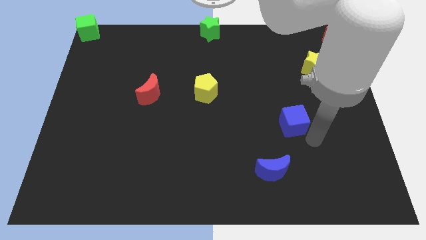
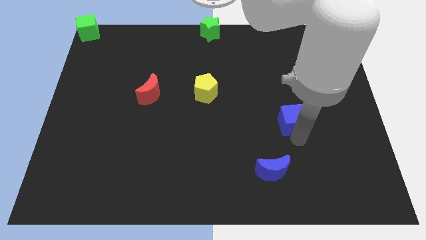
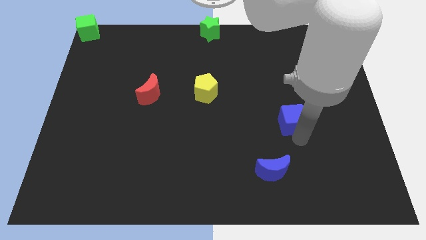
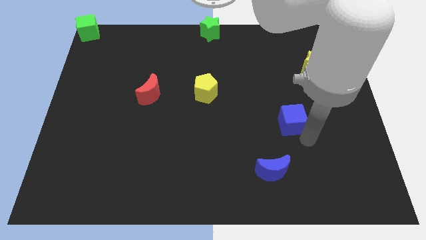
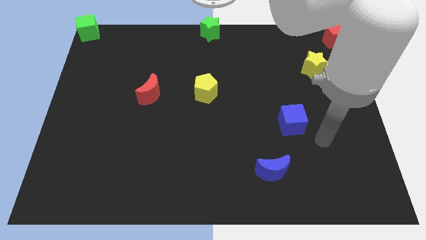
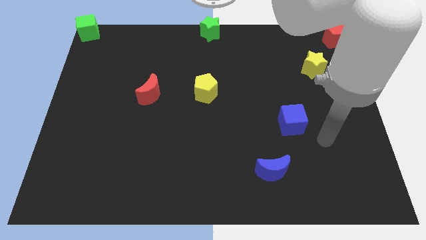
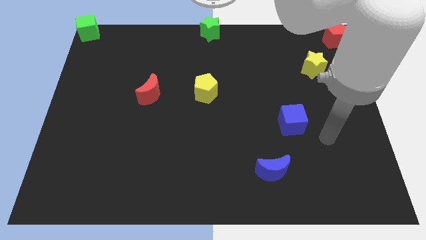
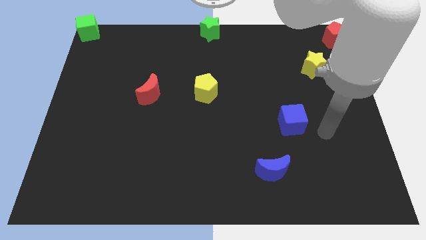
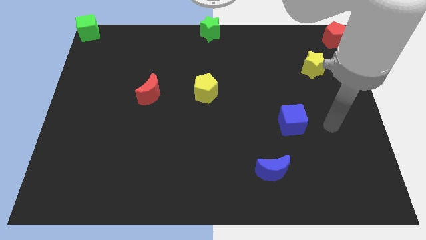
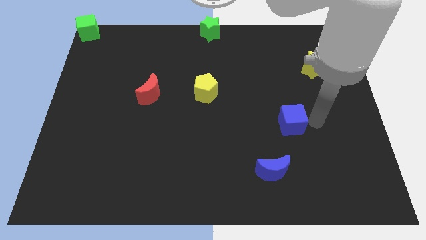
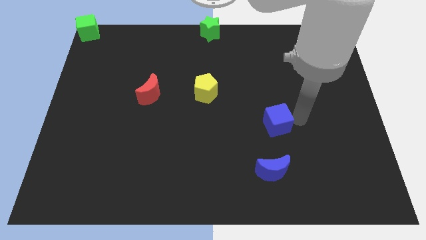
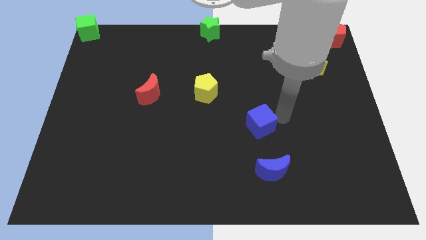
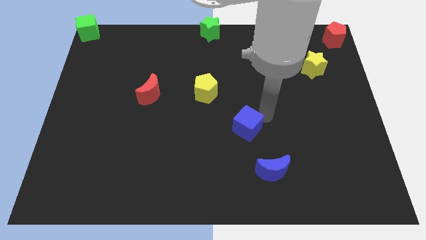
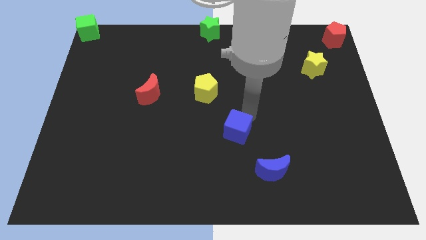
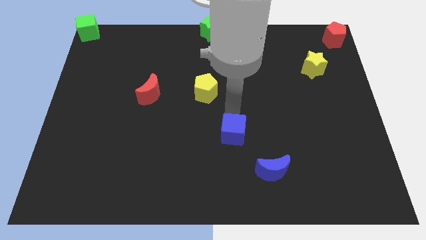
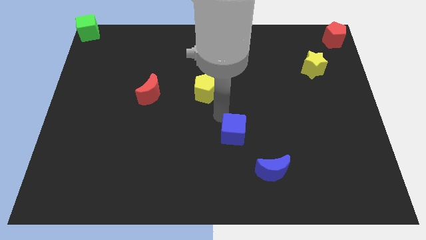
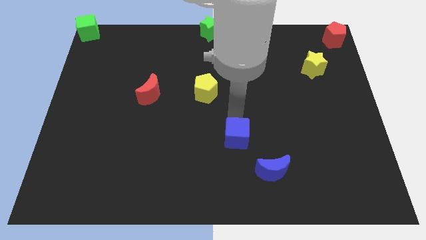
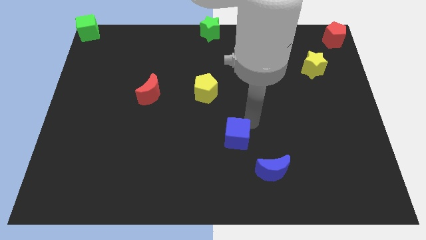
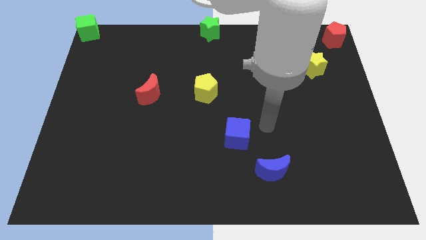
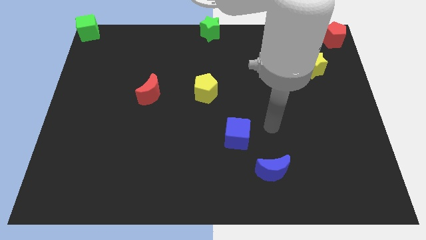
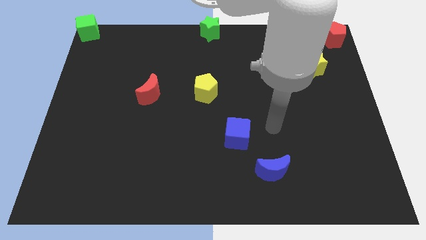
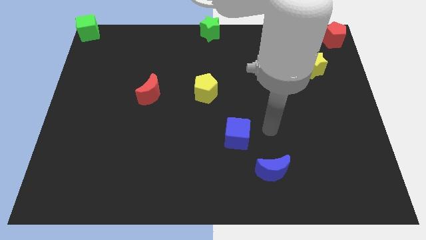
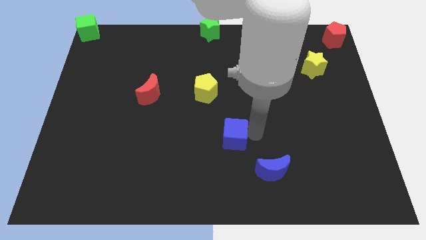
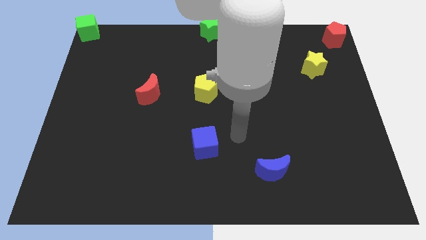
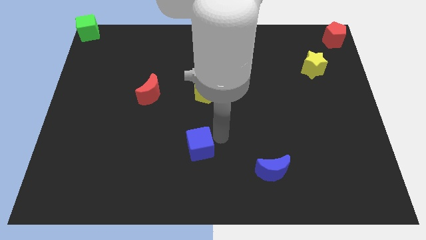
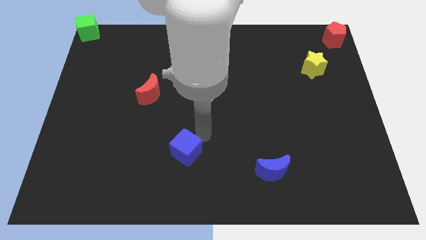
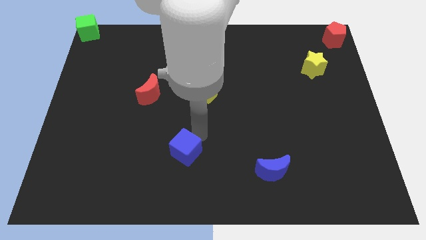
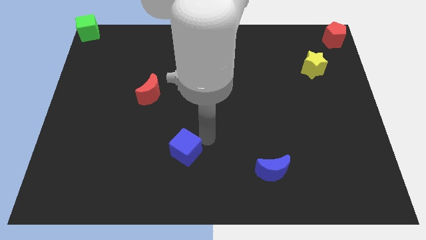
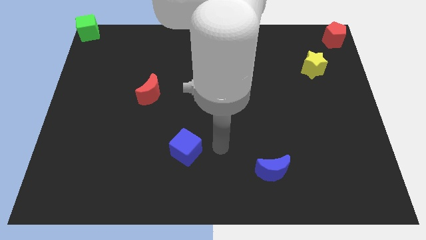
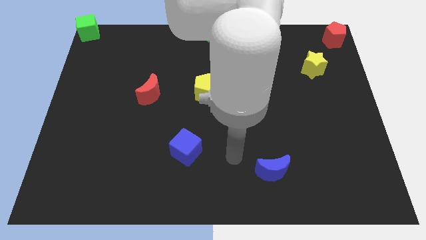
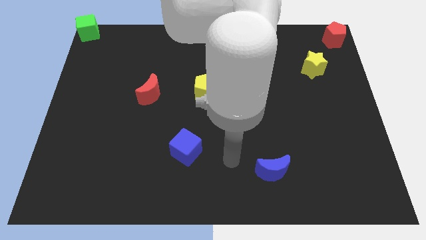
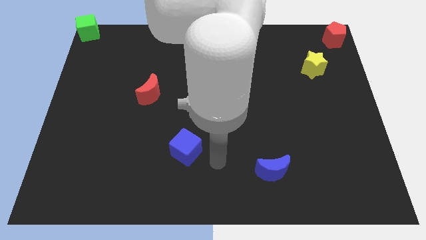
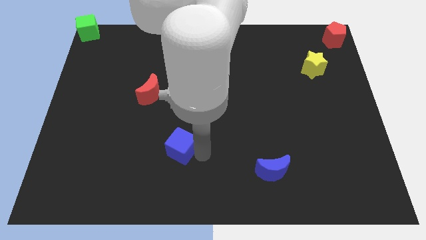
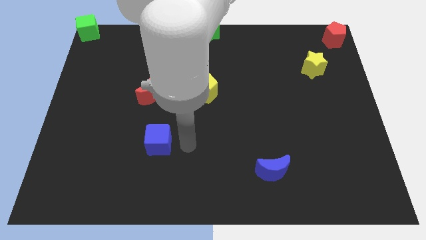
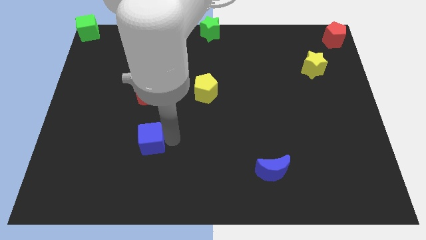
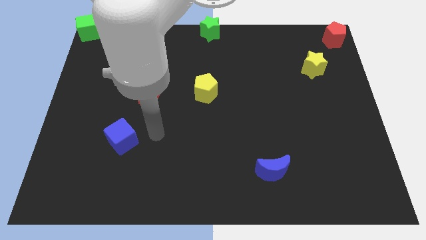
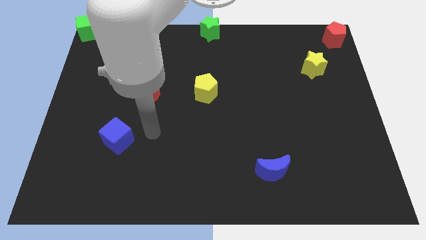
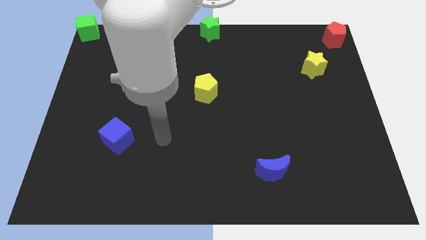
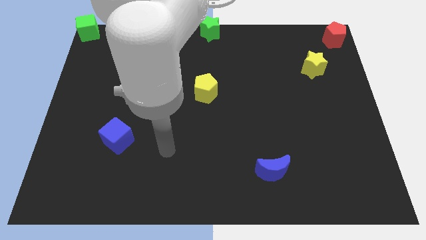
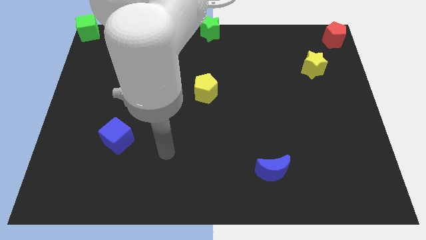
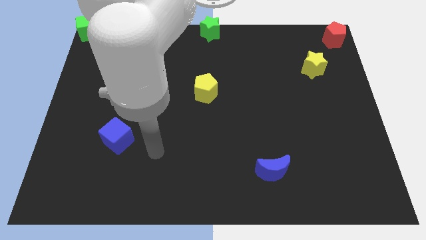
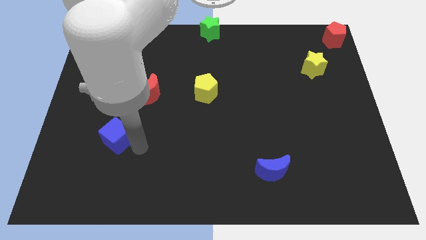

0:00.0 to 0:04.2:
slide the blue cube towards the left side of the board

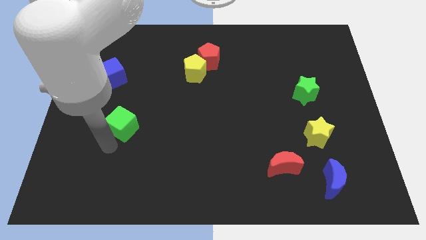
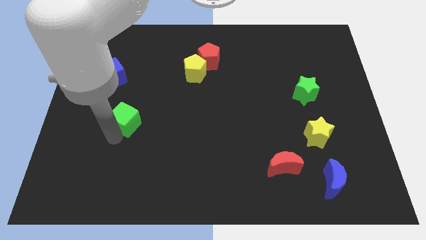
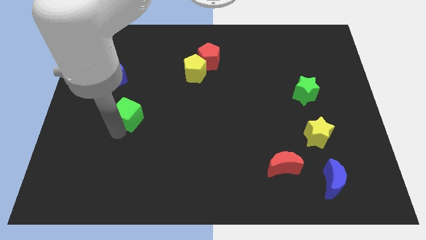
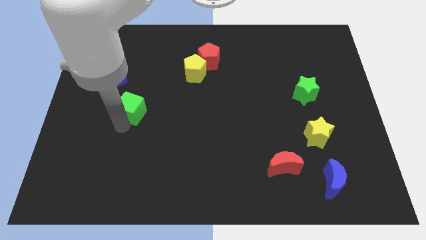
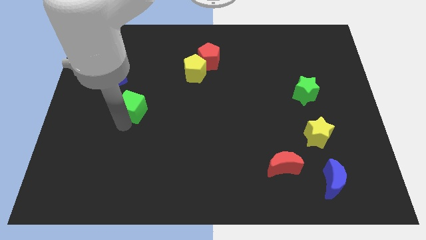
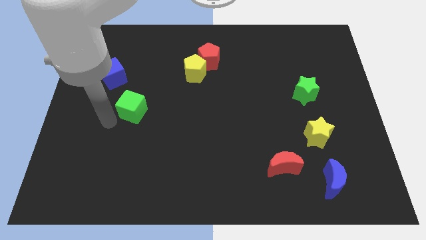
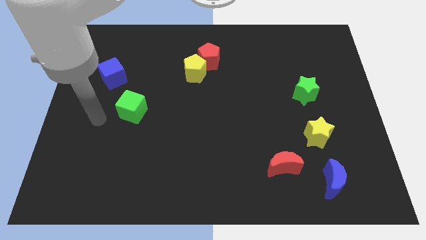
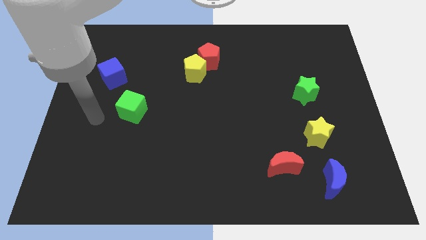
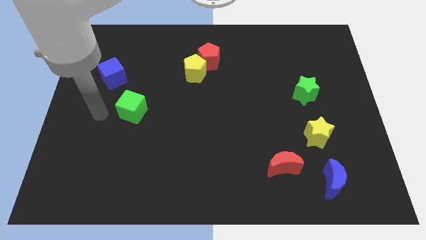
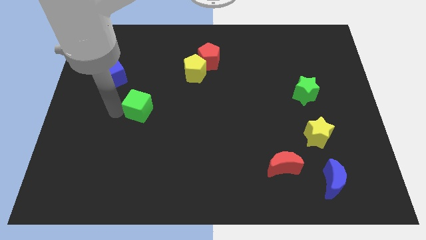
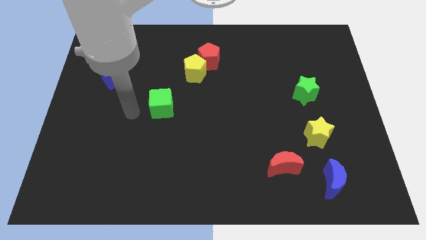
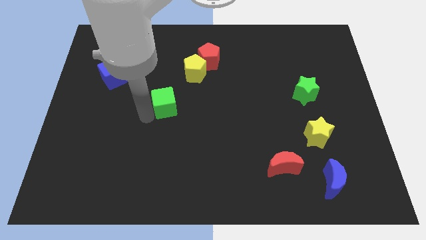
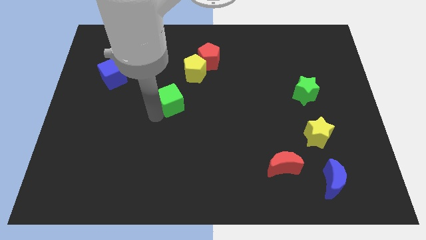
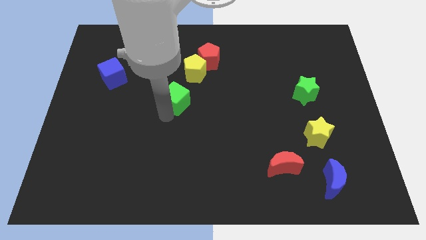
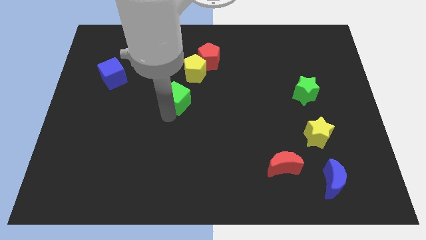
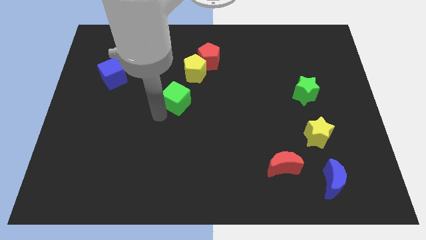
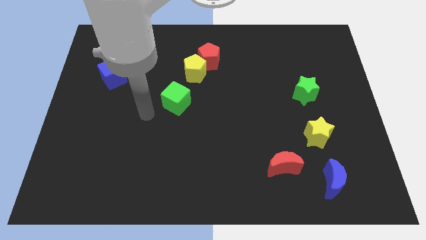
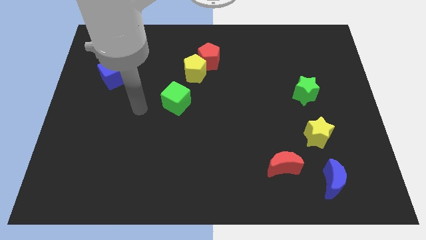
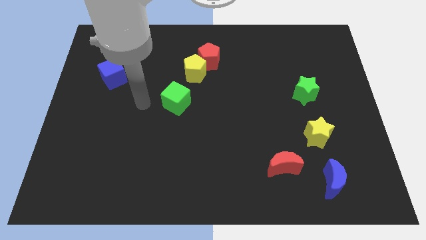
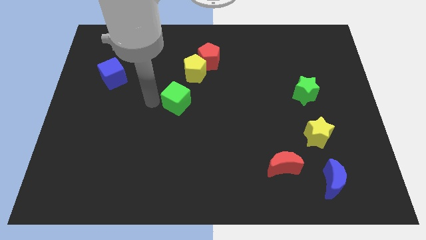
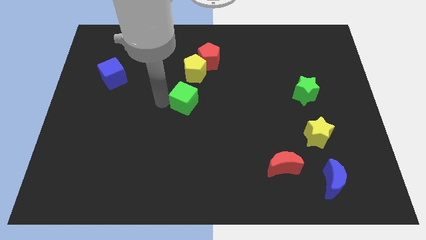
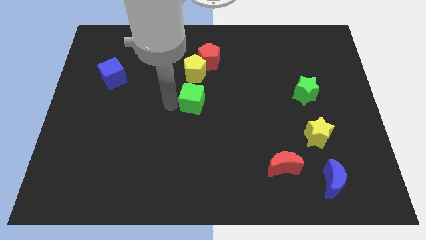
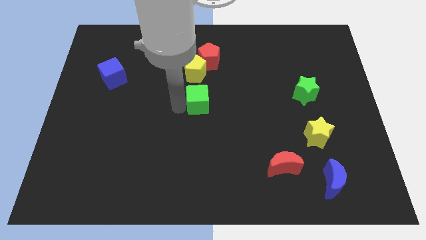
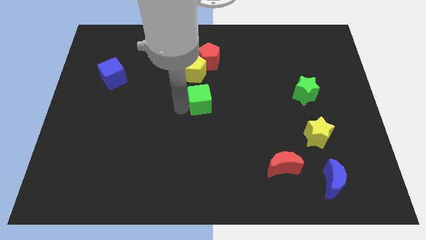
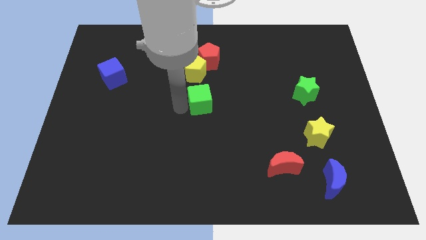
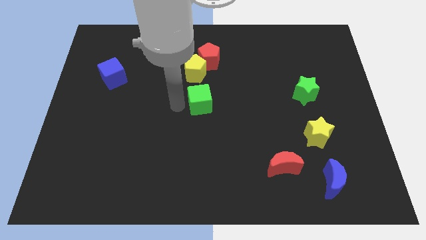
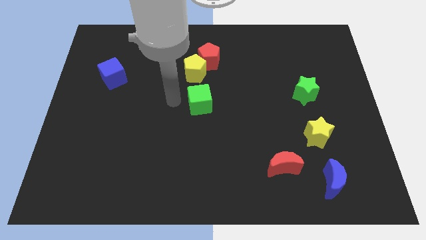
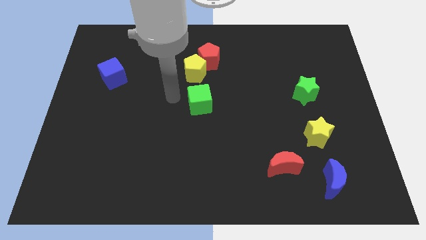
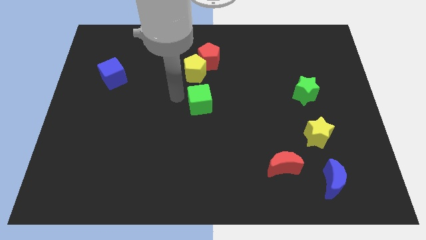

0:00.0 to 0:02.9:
move the green cube to the center of the board

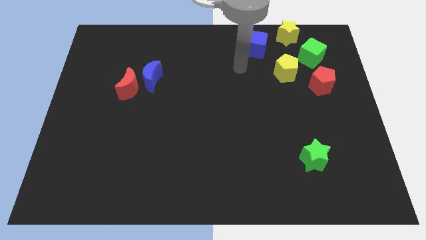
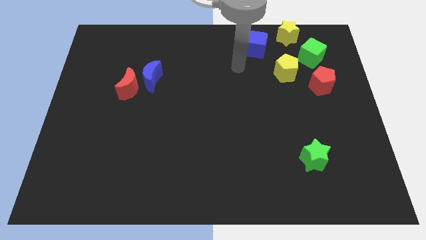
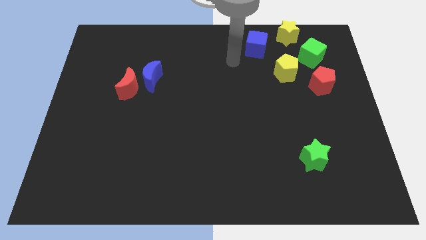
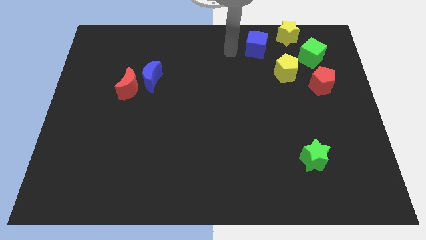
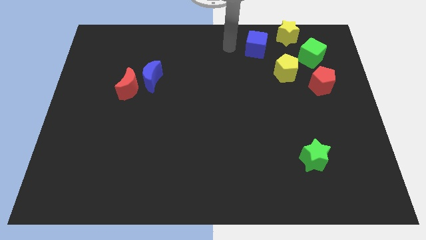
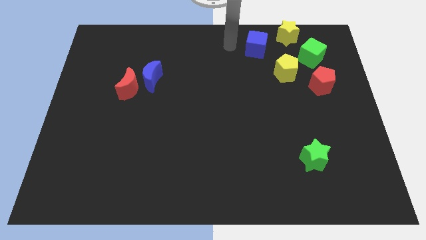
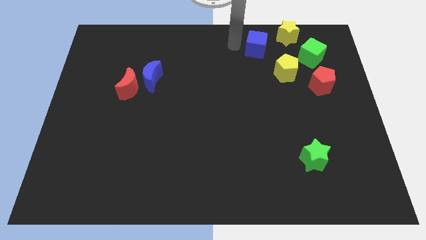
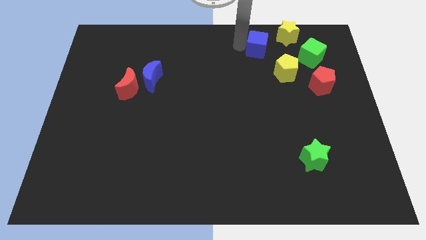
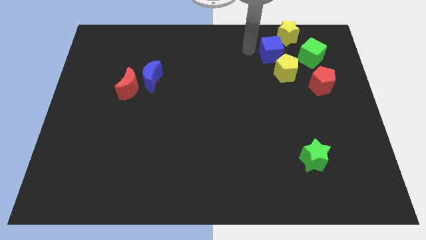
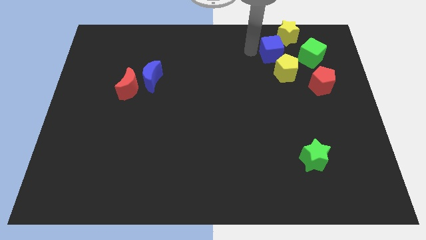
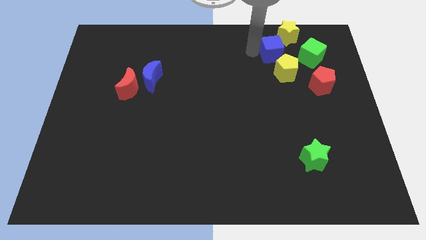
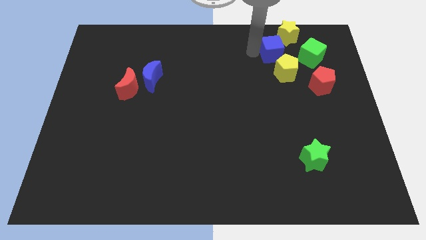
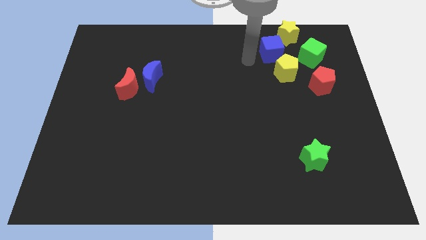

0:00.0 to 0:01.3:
move the blue cube slightly to the right

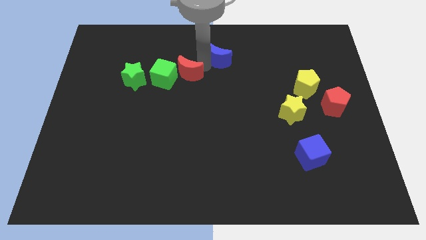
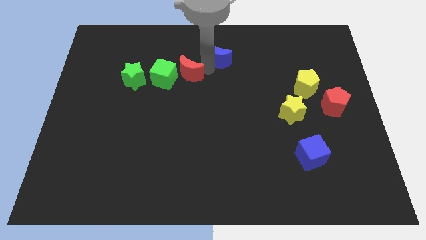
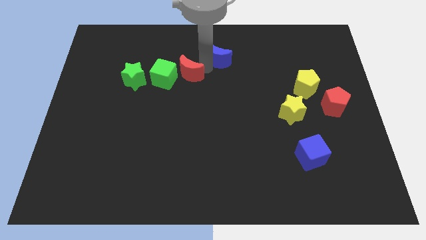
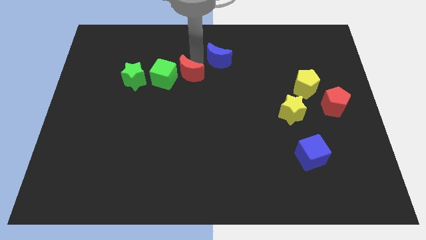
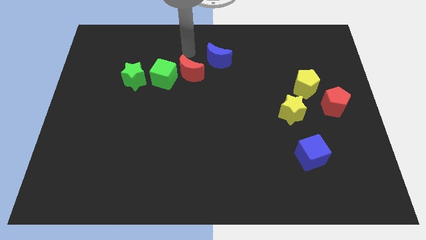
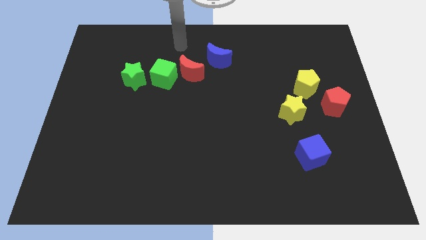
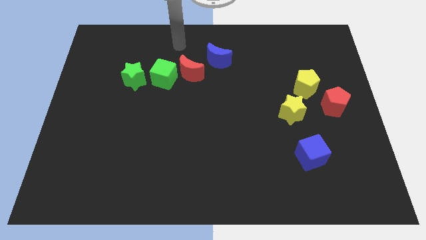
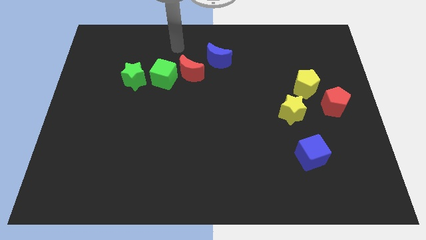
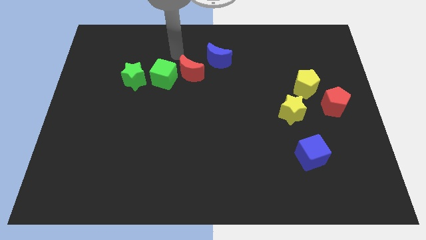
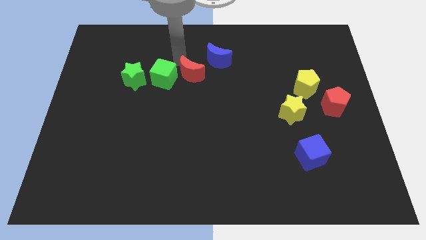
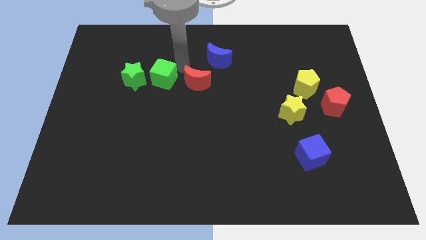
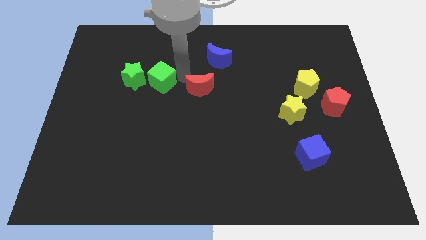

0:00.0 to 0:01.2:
move red crescent horizontally
